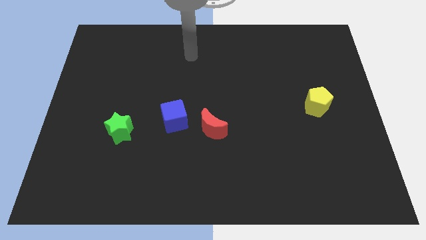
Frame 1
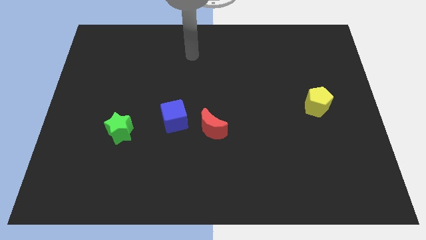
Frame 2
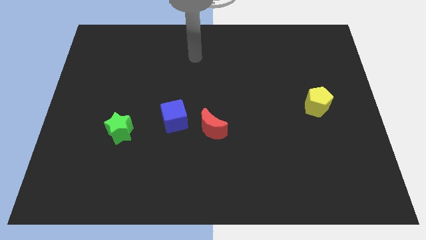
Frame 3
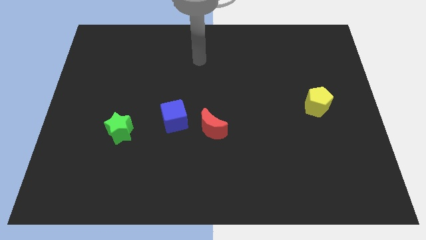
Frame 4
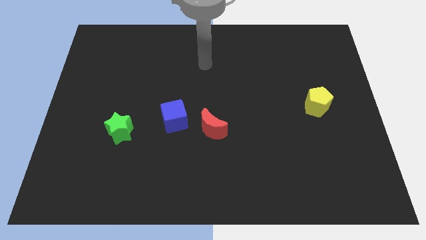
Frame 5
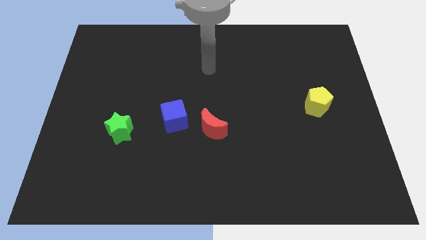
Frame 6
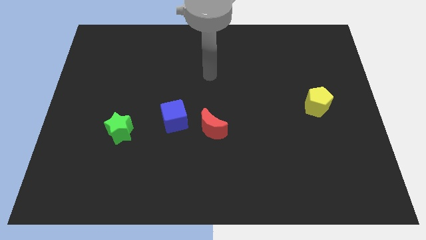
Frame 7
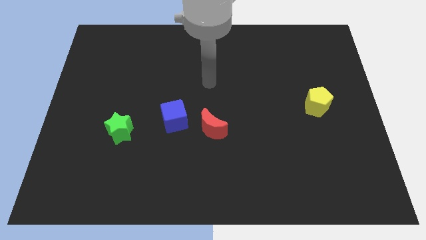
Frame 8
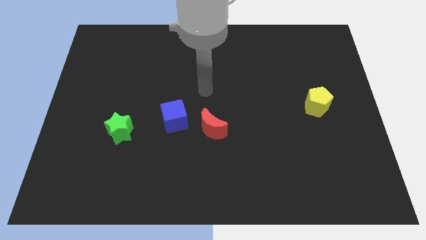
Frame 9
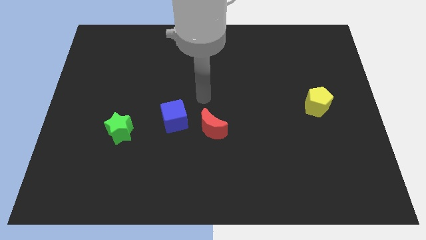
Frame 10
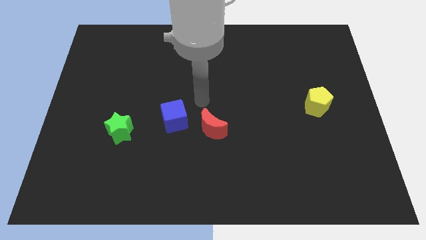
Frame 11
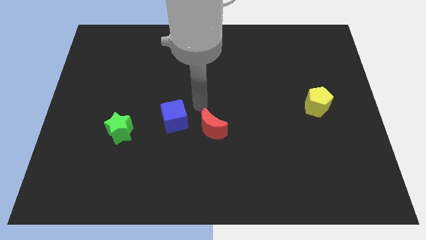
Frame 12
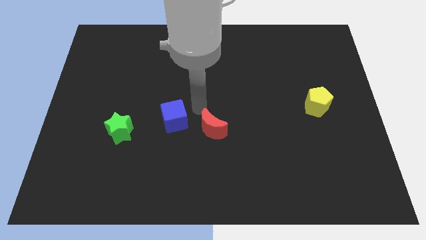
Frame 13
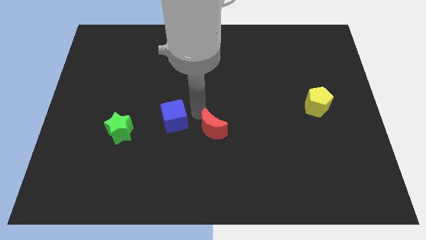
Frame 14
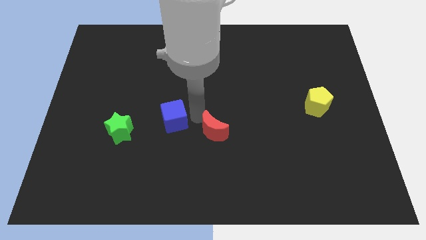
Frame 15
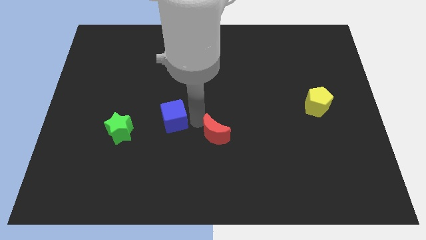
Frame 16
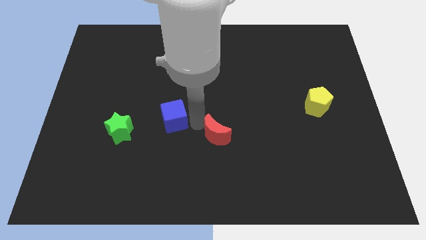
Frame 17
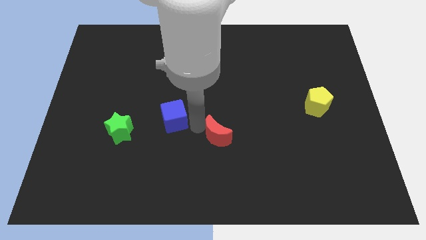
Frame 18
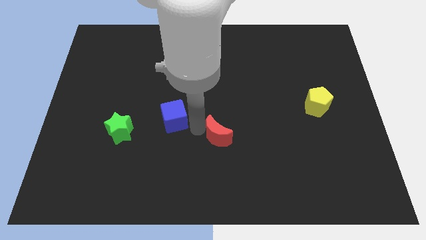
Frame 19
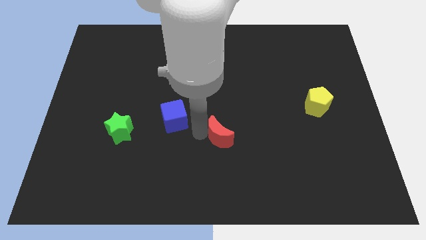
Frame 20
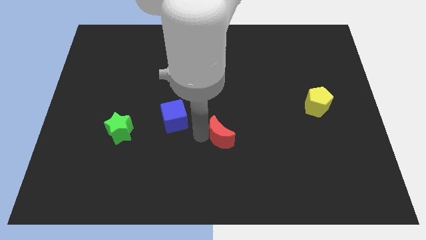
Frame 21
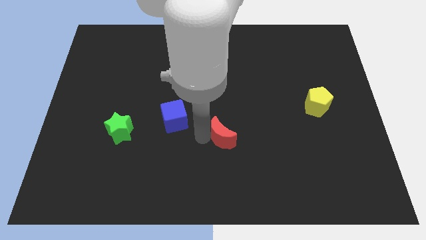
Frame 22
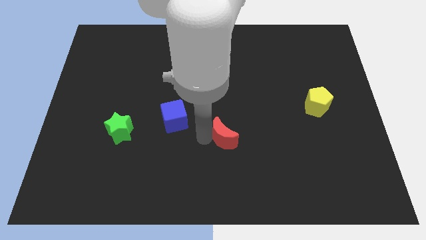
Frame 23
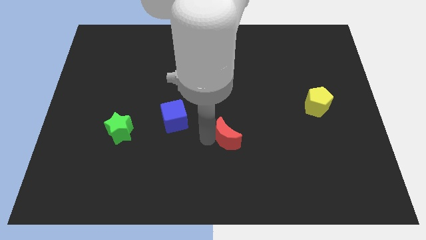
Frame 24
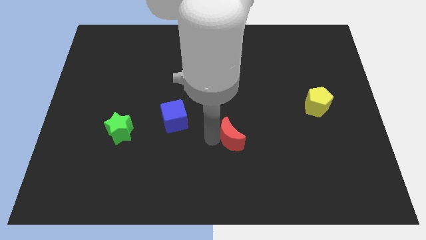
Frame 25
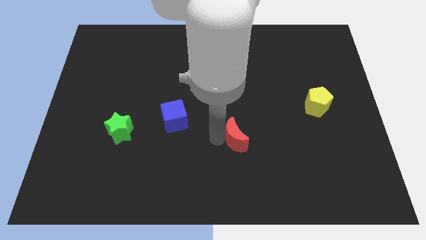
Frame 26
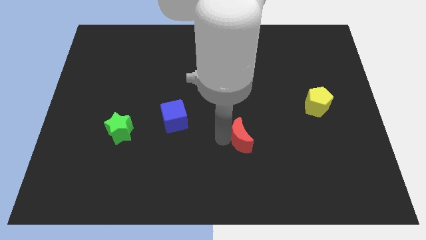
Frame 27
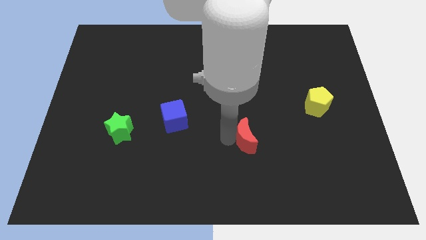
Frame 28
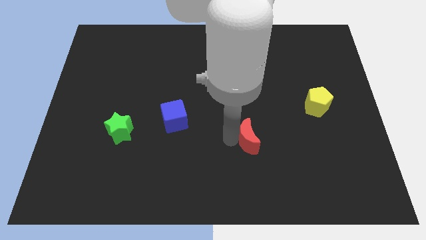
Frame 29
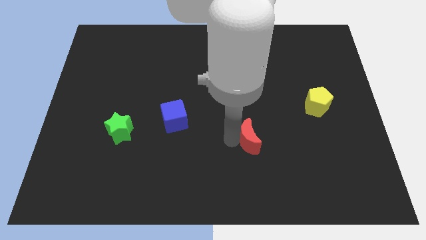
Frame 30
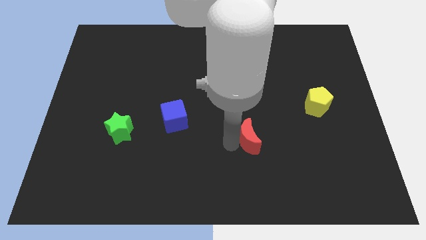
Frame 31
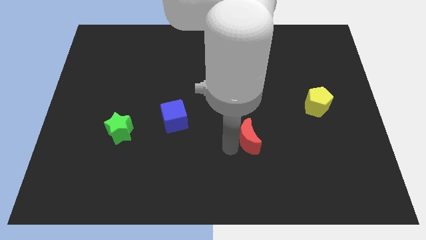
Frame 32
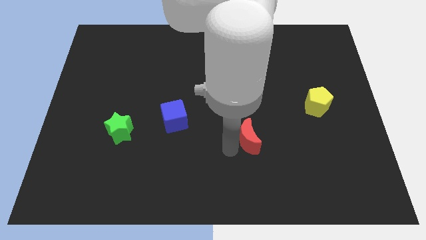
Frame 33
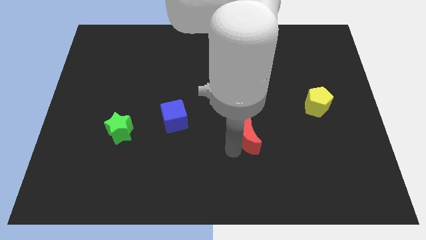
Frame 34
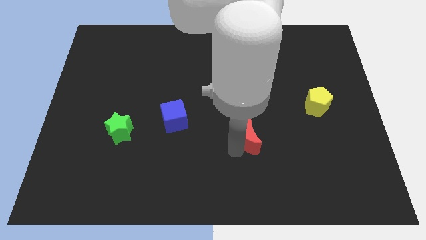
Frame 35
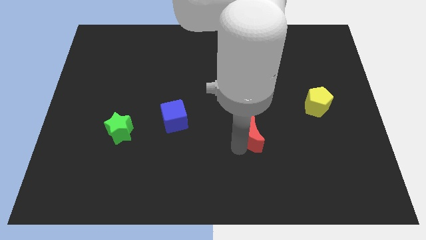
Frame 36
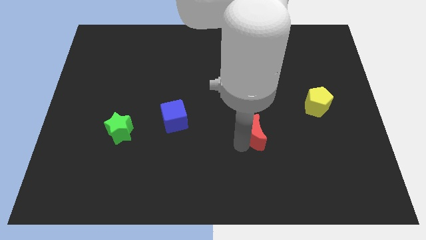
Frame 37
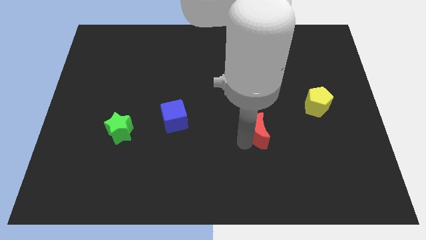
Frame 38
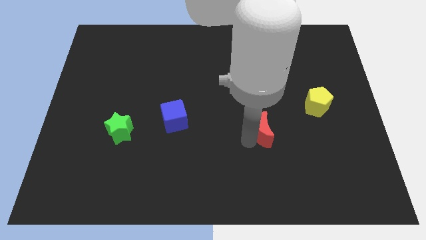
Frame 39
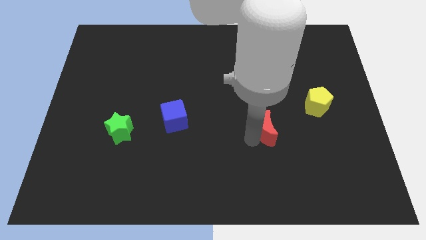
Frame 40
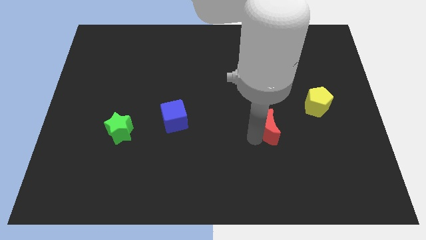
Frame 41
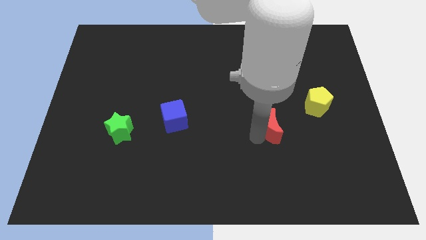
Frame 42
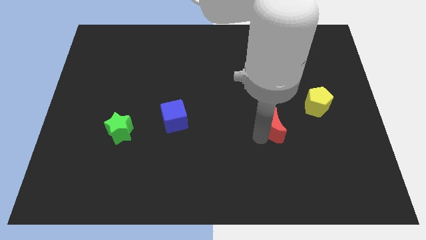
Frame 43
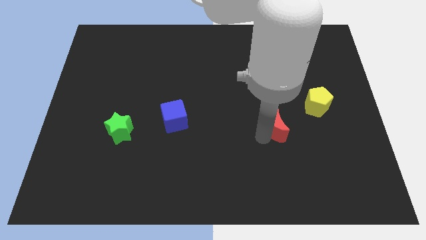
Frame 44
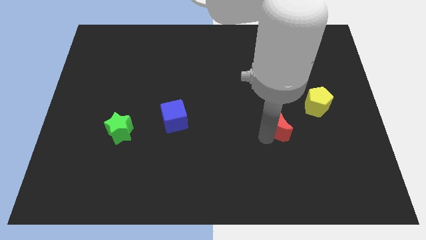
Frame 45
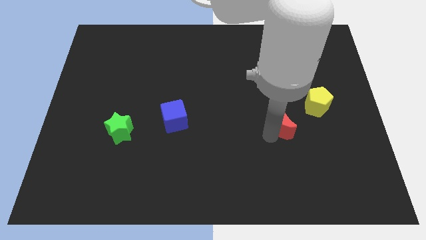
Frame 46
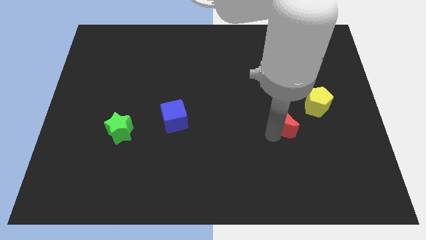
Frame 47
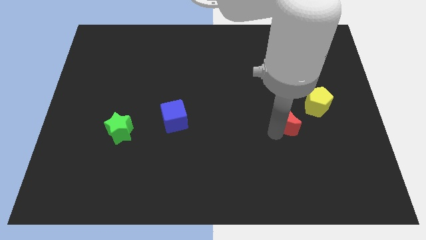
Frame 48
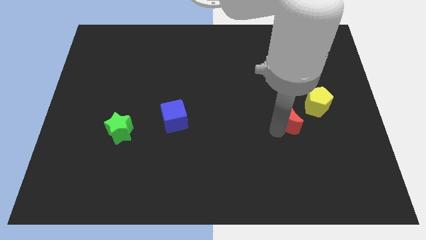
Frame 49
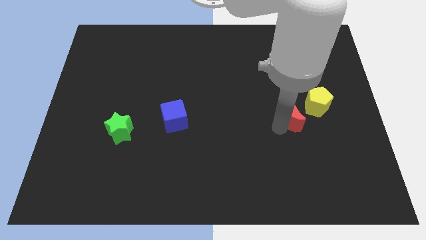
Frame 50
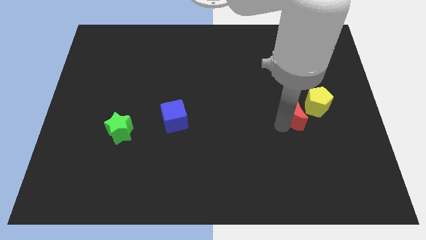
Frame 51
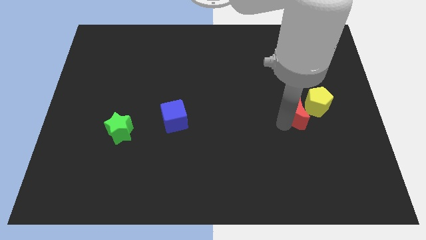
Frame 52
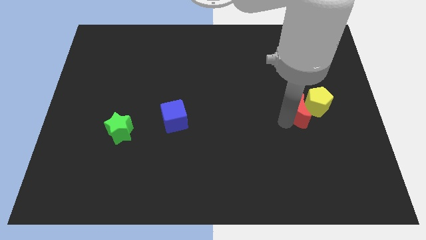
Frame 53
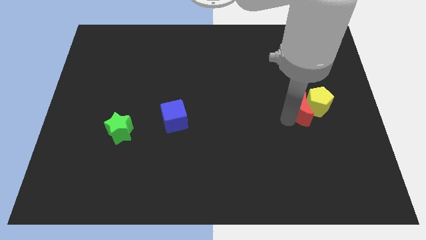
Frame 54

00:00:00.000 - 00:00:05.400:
move the red block to the pentagon

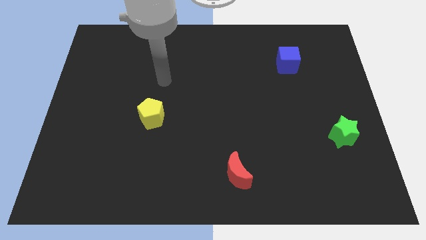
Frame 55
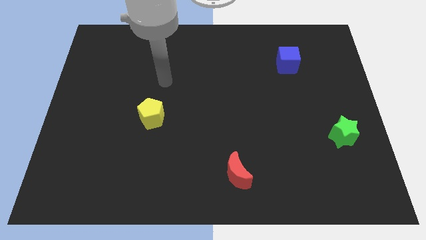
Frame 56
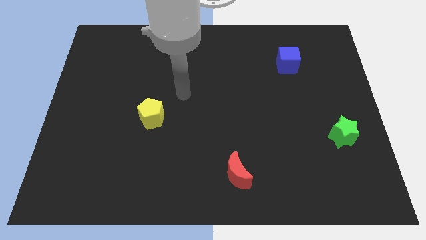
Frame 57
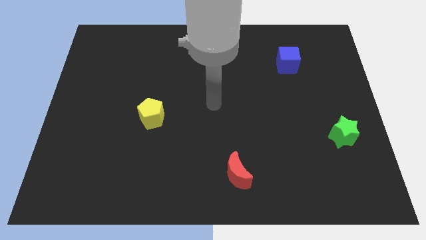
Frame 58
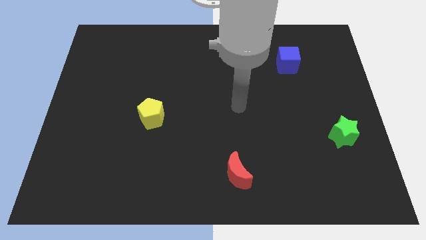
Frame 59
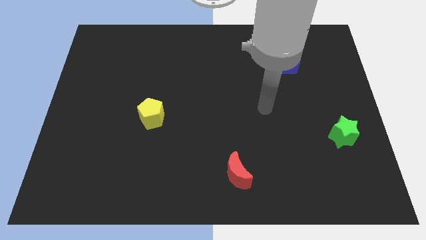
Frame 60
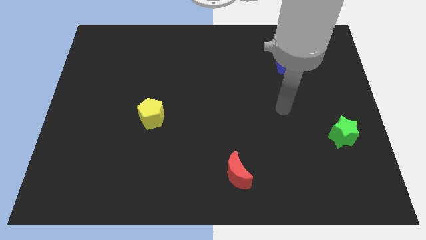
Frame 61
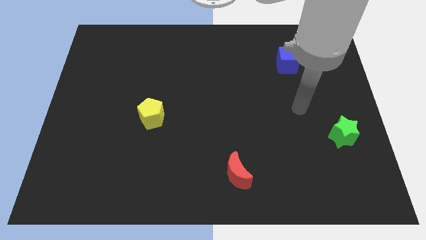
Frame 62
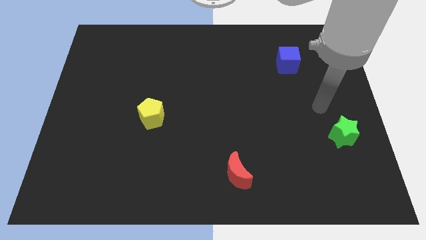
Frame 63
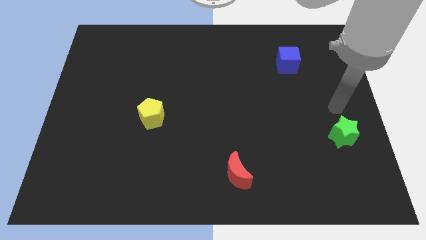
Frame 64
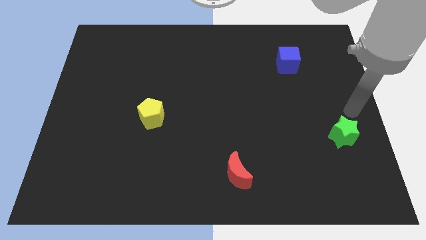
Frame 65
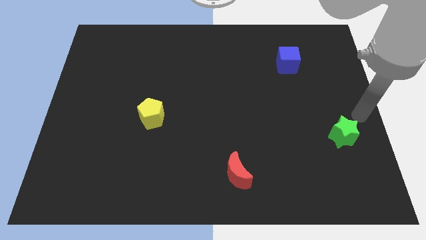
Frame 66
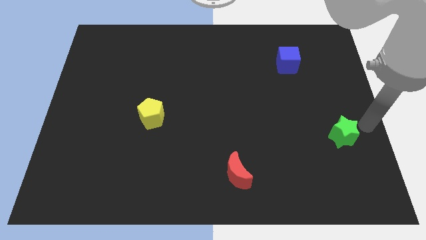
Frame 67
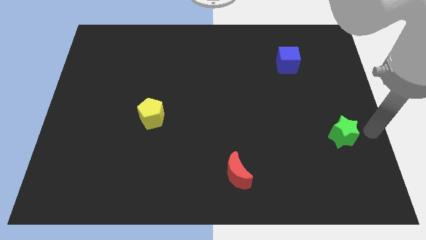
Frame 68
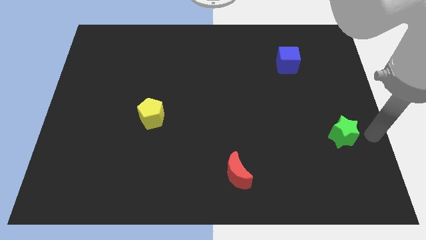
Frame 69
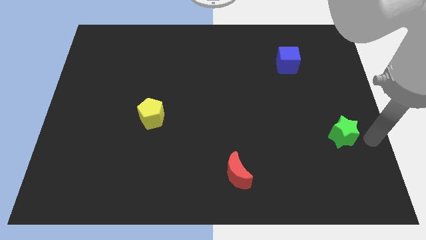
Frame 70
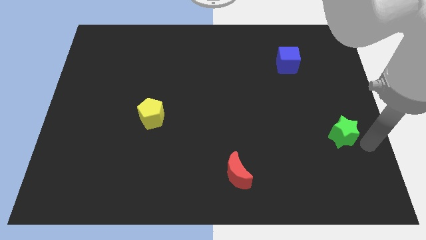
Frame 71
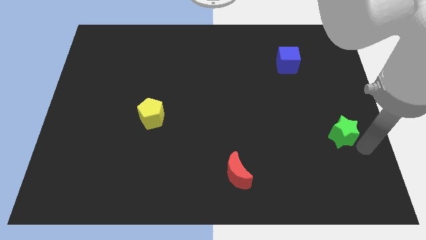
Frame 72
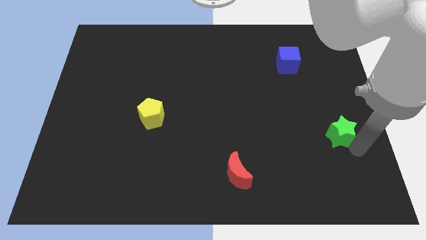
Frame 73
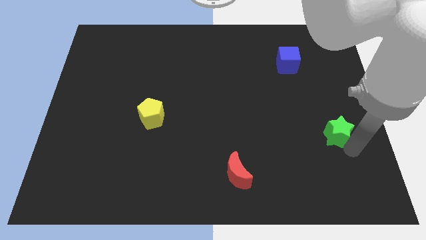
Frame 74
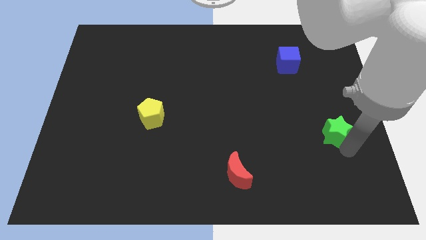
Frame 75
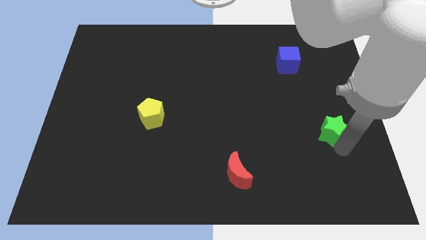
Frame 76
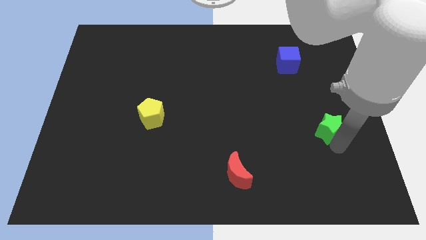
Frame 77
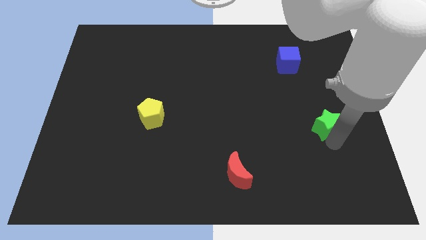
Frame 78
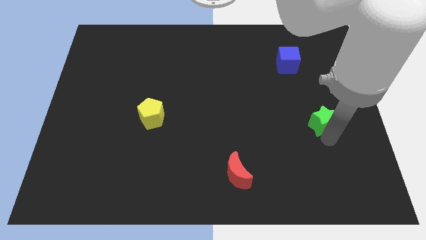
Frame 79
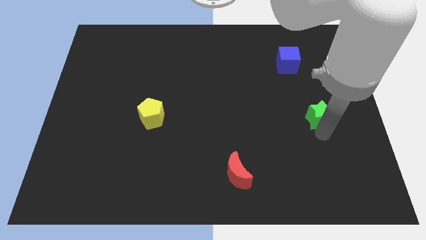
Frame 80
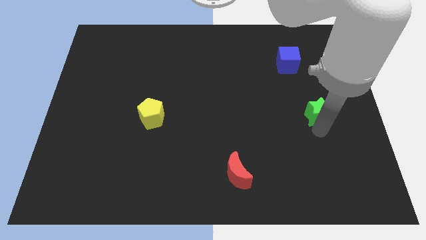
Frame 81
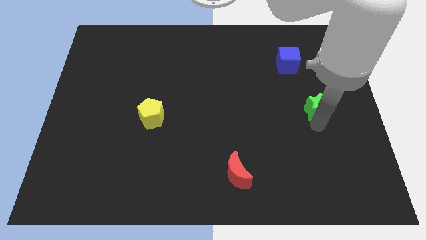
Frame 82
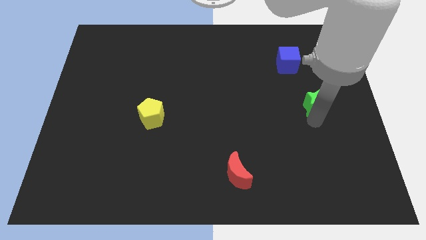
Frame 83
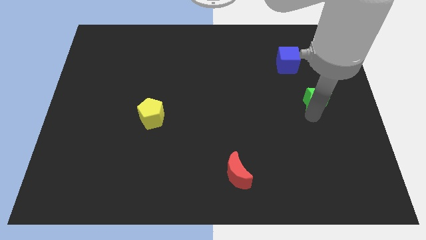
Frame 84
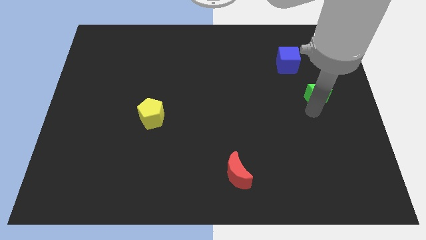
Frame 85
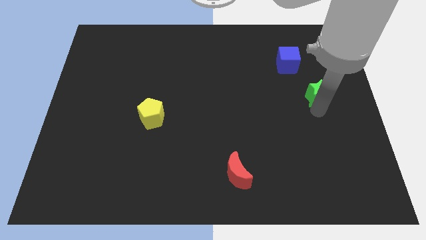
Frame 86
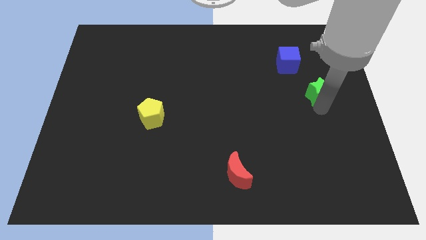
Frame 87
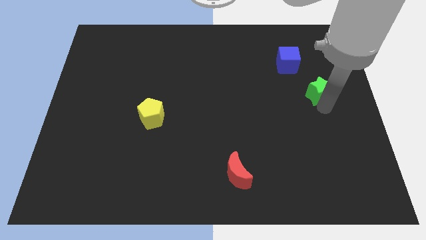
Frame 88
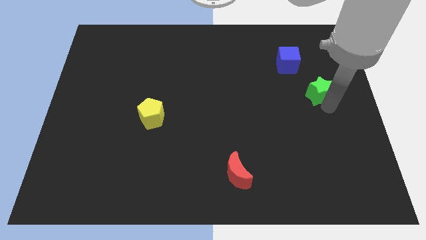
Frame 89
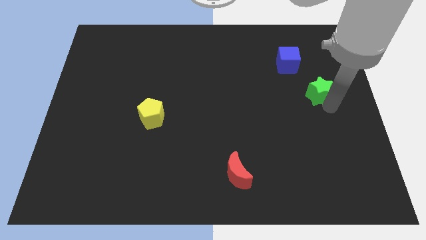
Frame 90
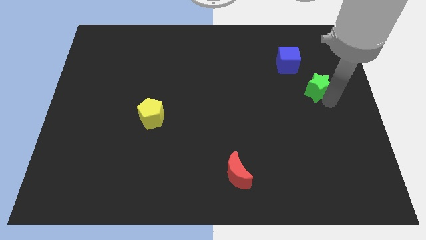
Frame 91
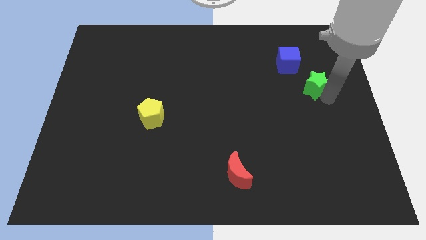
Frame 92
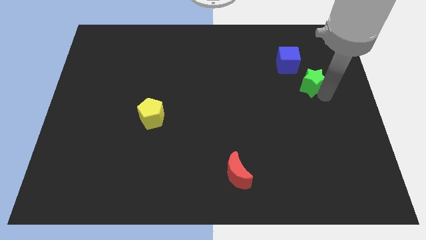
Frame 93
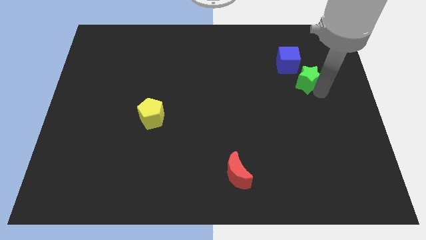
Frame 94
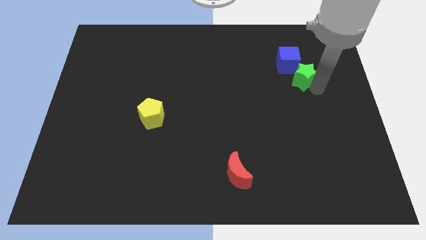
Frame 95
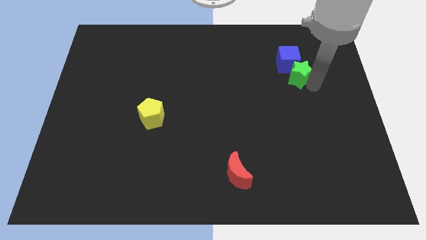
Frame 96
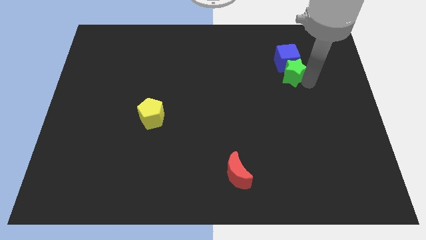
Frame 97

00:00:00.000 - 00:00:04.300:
put the star close to the cube
